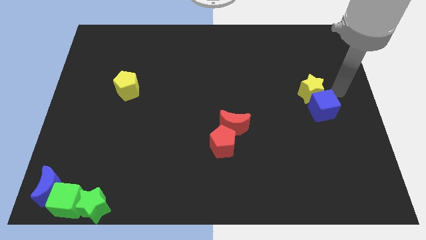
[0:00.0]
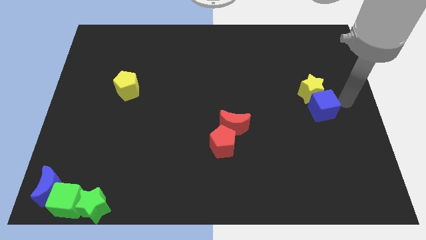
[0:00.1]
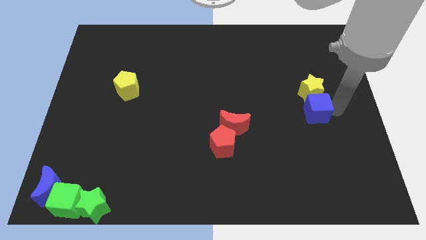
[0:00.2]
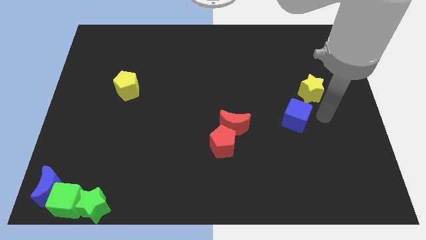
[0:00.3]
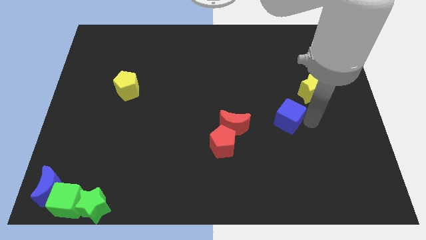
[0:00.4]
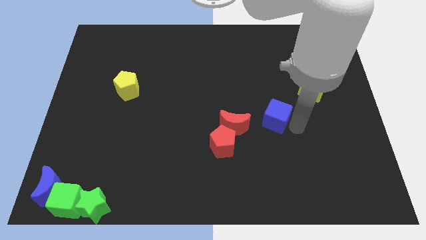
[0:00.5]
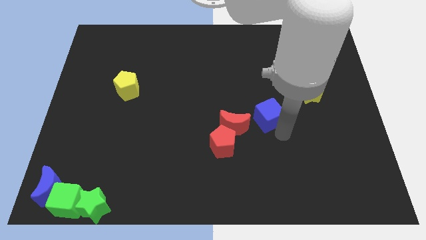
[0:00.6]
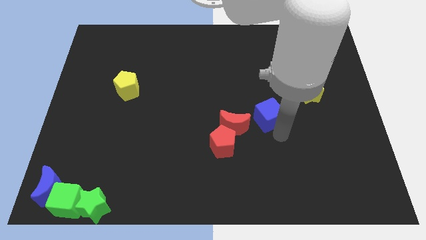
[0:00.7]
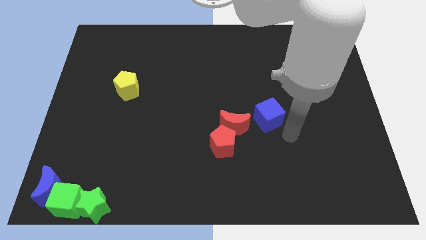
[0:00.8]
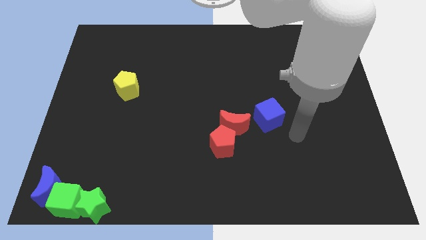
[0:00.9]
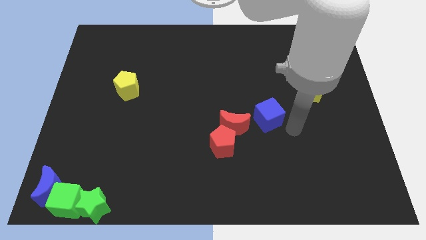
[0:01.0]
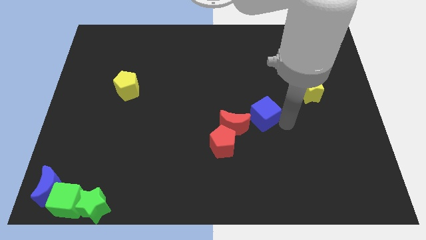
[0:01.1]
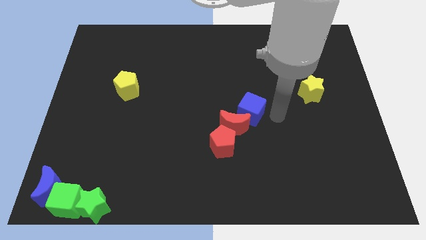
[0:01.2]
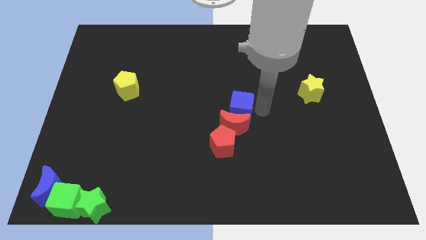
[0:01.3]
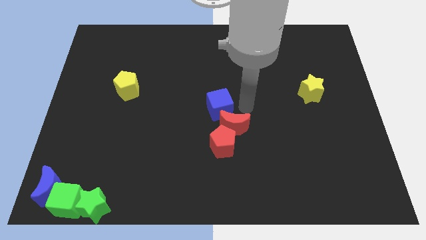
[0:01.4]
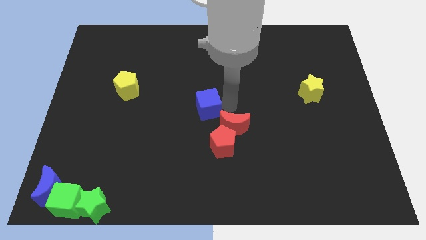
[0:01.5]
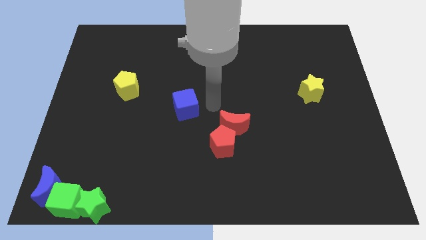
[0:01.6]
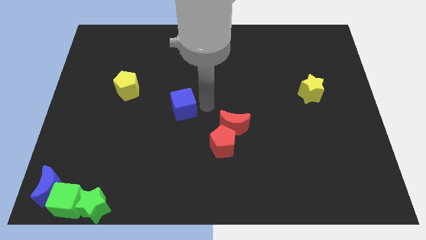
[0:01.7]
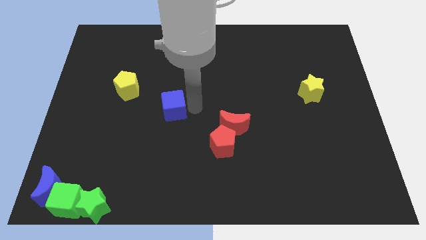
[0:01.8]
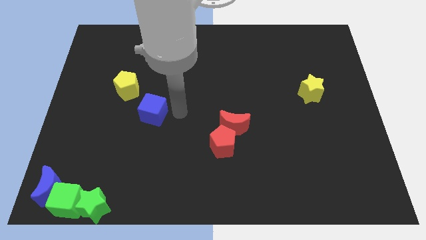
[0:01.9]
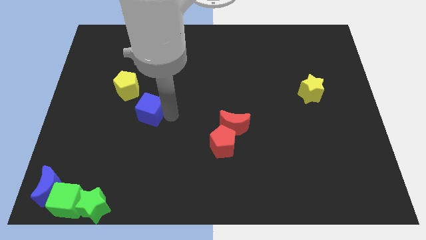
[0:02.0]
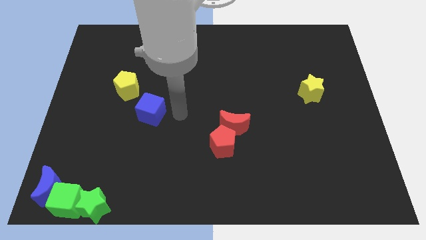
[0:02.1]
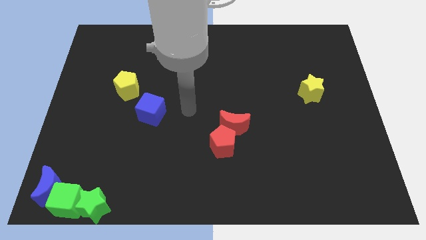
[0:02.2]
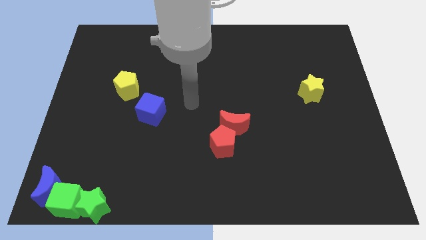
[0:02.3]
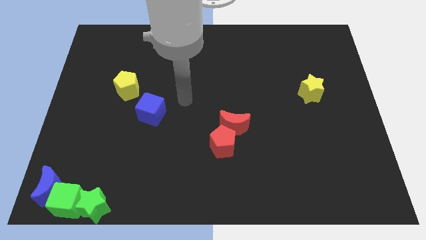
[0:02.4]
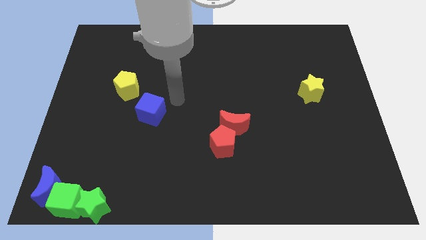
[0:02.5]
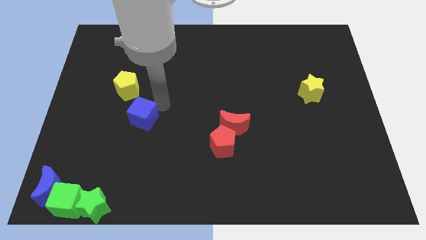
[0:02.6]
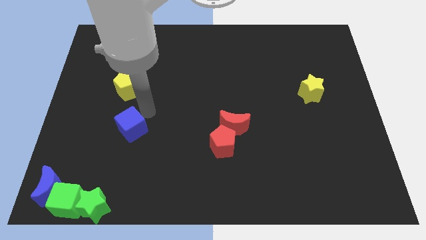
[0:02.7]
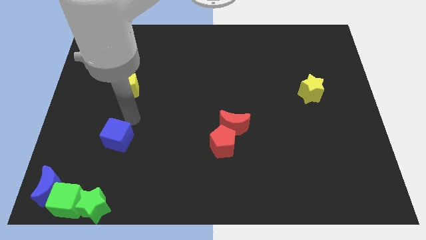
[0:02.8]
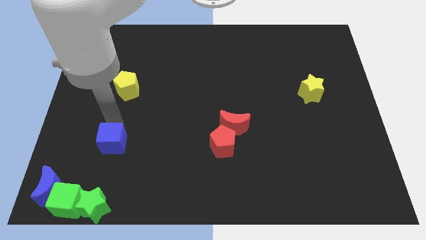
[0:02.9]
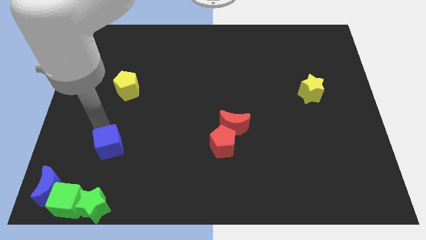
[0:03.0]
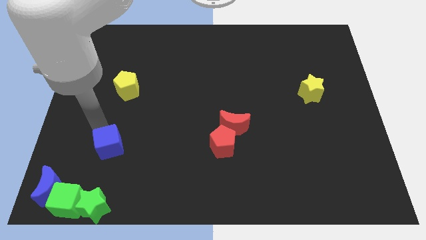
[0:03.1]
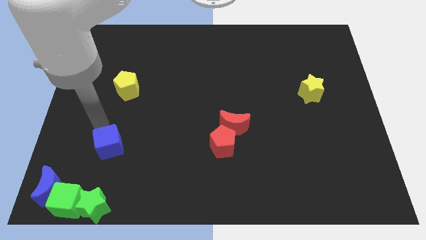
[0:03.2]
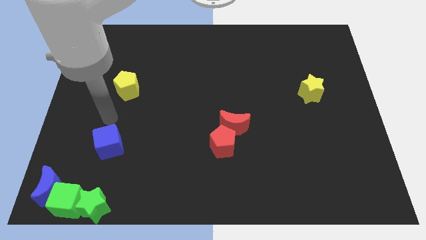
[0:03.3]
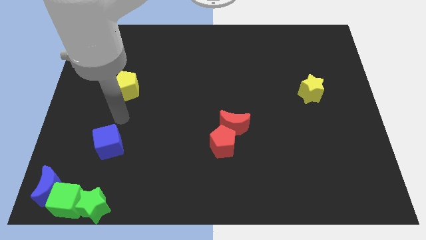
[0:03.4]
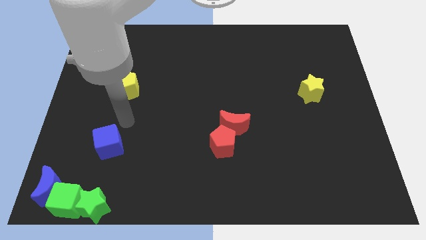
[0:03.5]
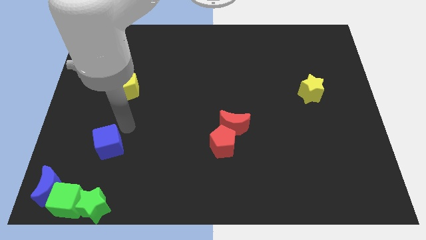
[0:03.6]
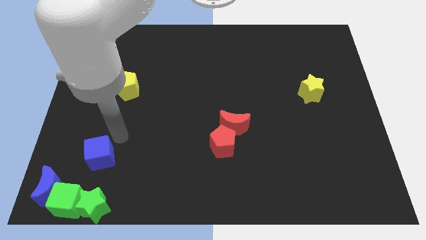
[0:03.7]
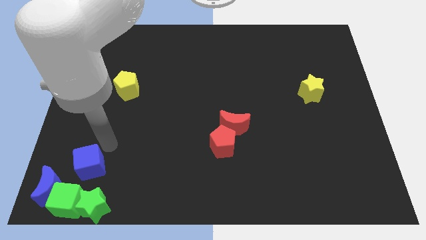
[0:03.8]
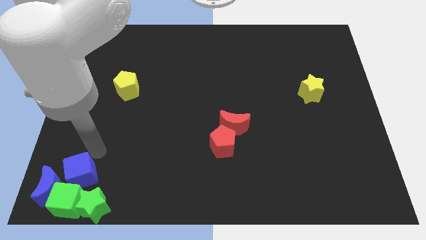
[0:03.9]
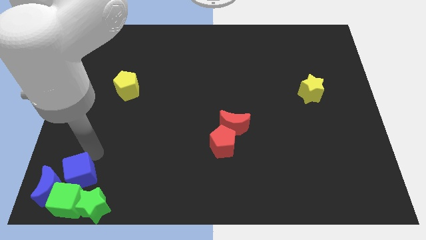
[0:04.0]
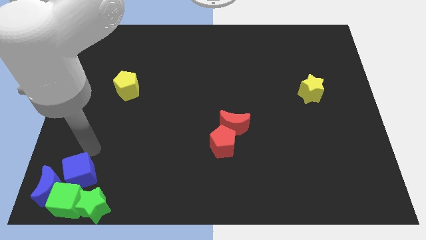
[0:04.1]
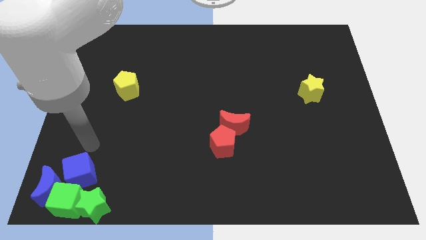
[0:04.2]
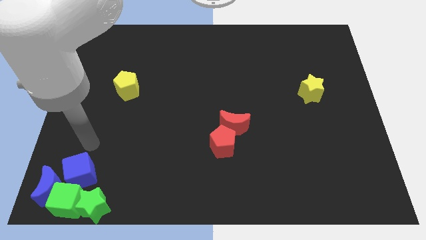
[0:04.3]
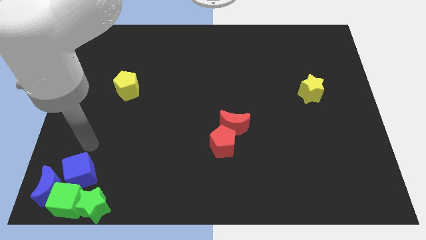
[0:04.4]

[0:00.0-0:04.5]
place the blue cube above the green cube

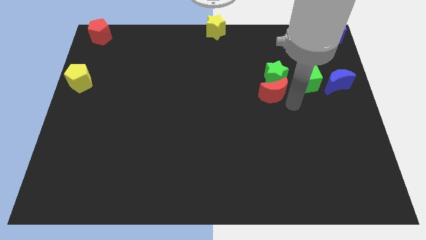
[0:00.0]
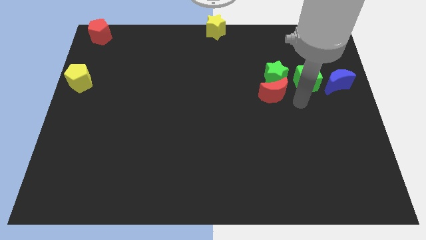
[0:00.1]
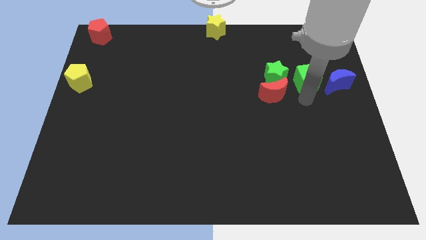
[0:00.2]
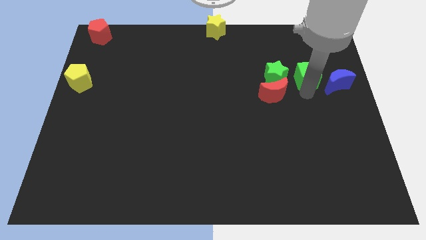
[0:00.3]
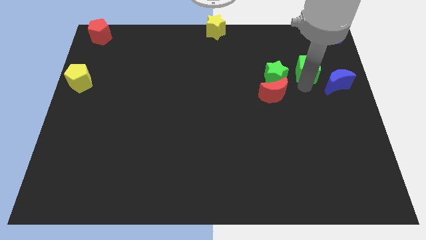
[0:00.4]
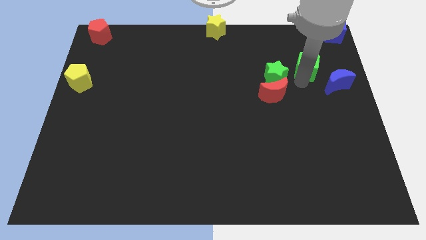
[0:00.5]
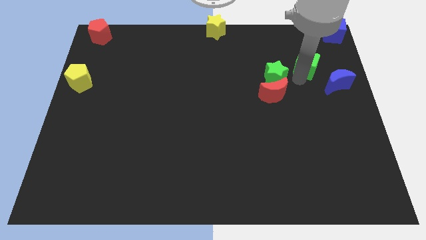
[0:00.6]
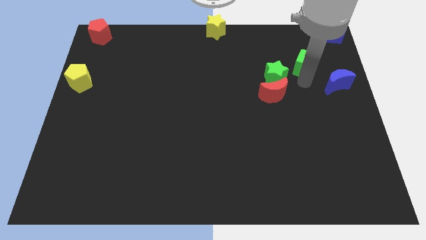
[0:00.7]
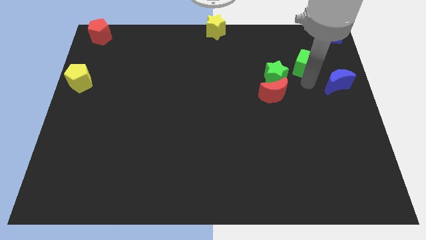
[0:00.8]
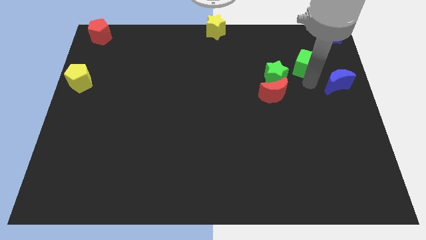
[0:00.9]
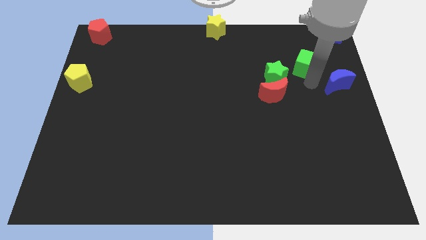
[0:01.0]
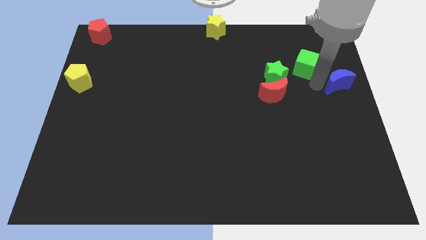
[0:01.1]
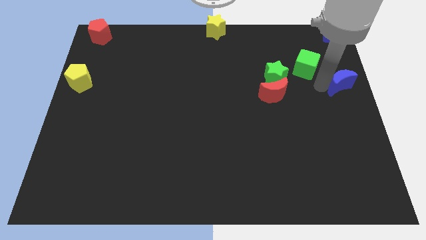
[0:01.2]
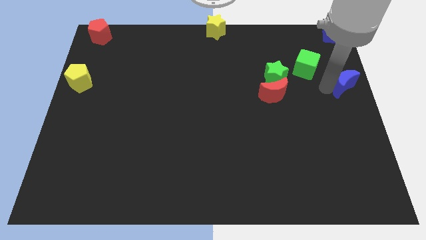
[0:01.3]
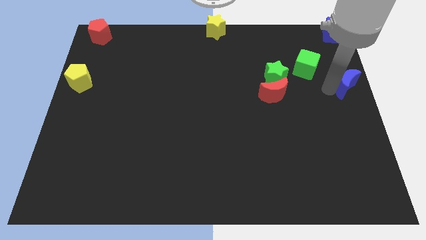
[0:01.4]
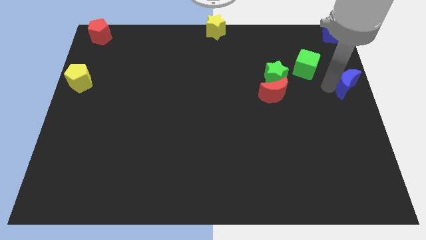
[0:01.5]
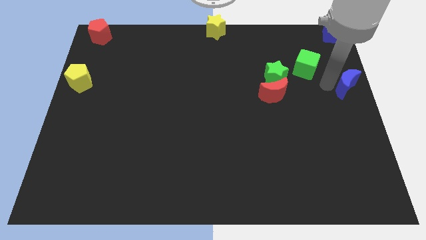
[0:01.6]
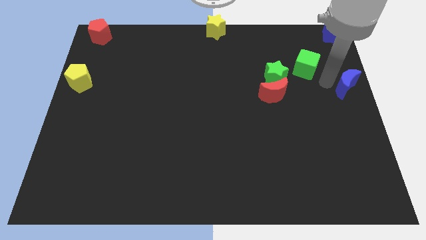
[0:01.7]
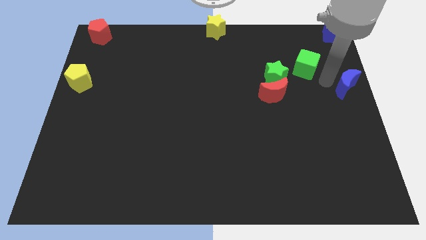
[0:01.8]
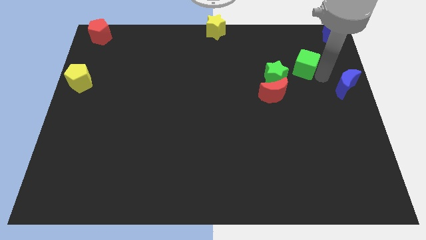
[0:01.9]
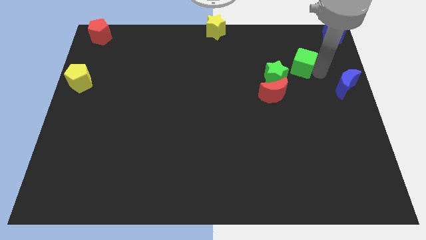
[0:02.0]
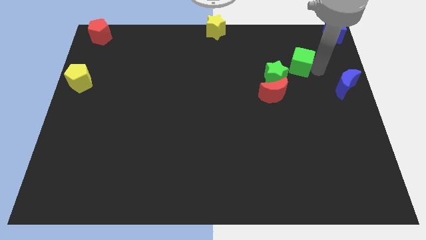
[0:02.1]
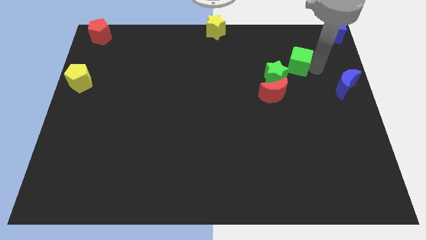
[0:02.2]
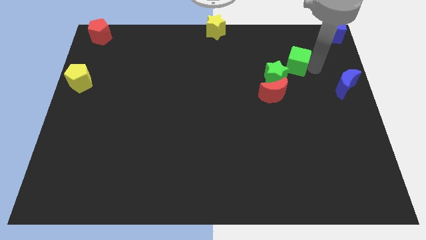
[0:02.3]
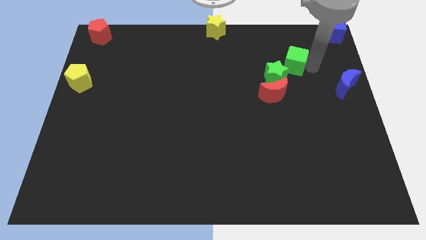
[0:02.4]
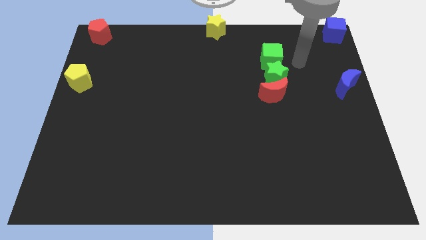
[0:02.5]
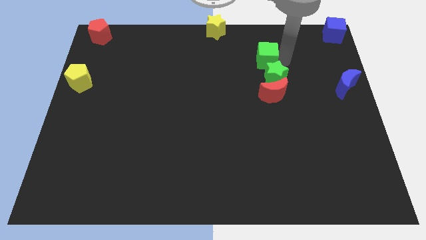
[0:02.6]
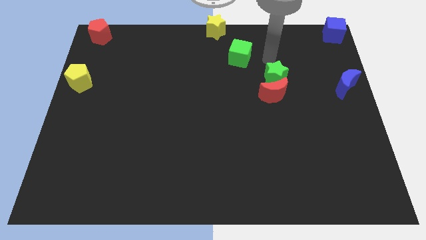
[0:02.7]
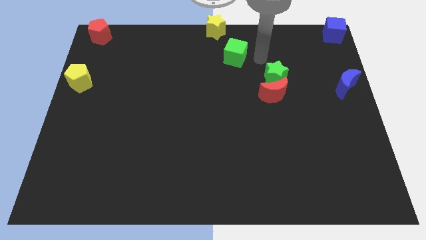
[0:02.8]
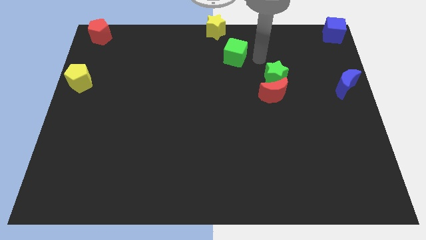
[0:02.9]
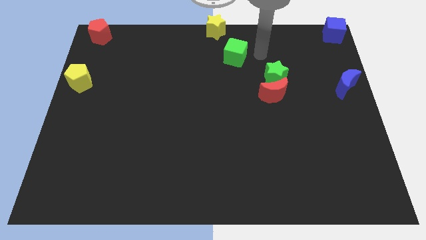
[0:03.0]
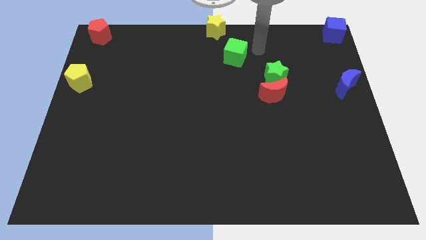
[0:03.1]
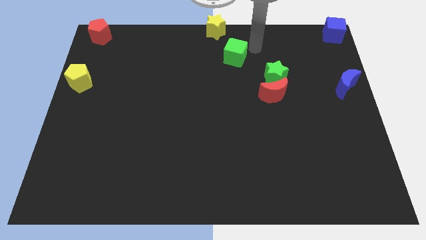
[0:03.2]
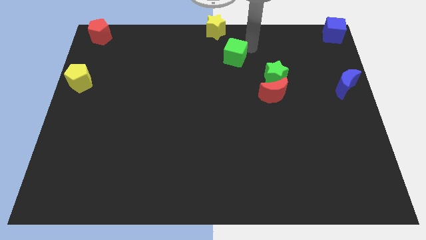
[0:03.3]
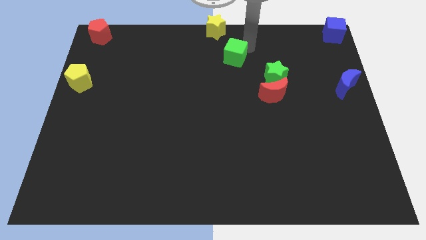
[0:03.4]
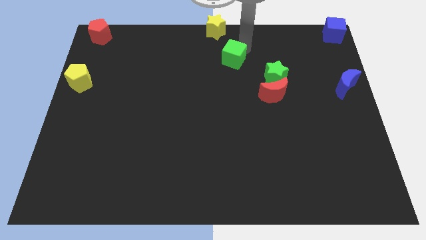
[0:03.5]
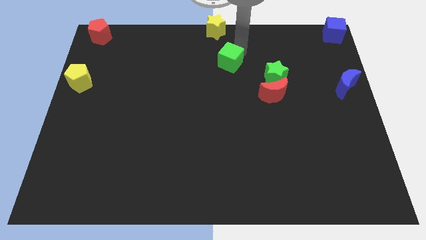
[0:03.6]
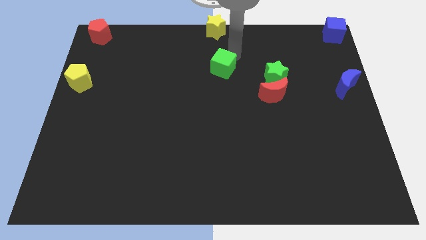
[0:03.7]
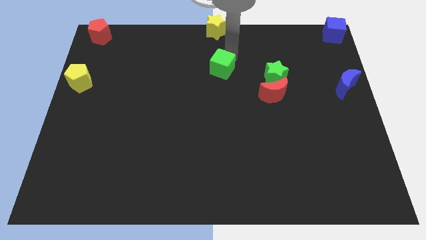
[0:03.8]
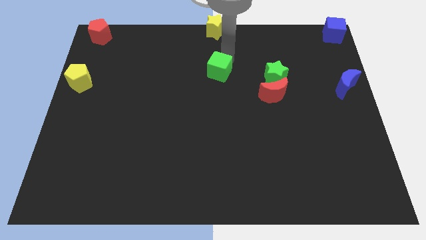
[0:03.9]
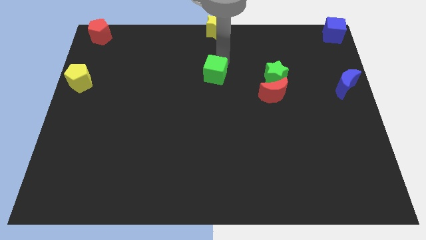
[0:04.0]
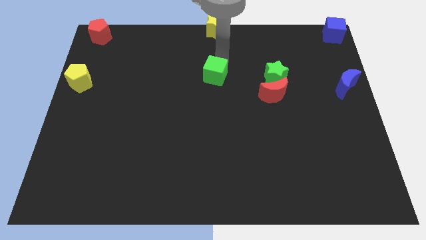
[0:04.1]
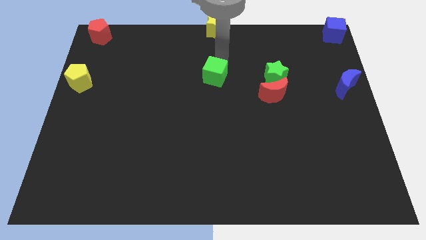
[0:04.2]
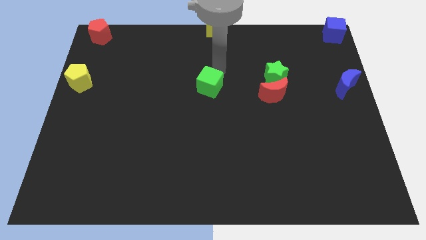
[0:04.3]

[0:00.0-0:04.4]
push the green cube to the vertical bottom side of the yellow star
